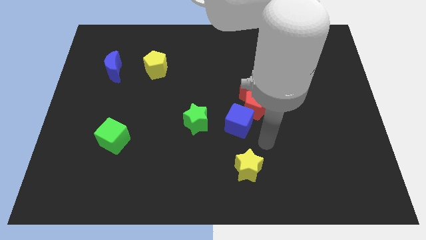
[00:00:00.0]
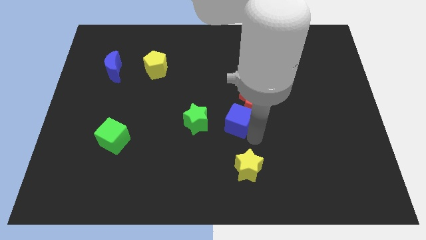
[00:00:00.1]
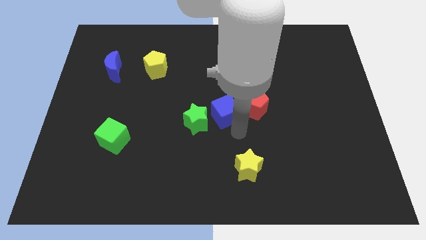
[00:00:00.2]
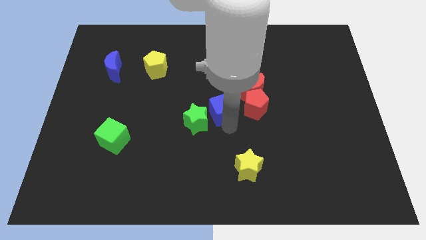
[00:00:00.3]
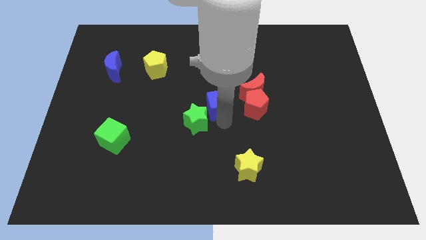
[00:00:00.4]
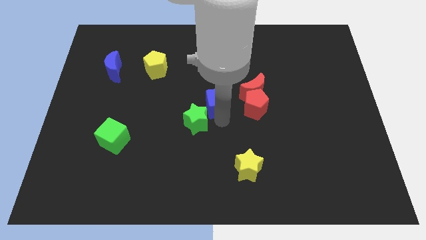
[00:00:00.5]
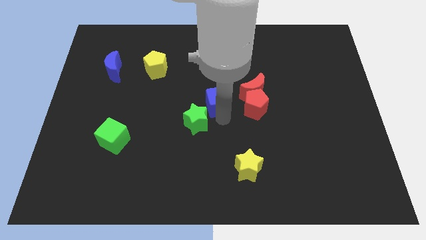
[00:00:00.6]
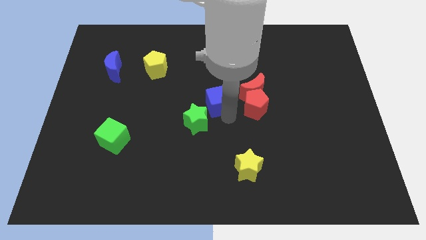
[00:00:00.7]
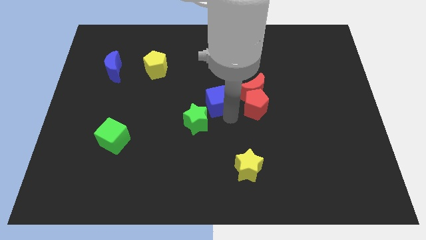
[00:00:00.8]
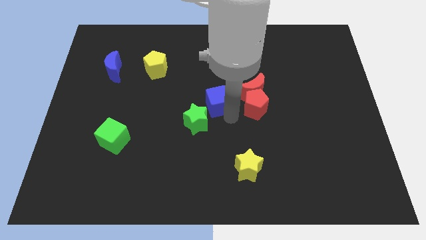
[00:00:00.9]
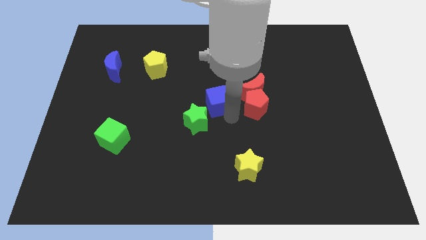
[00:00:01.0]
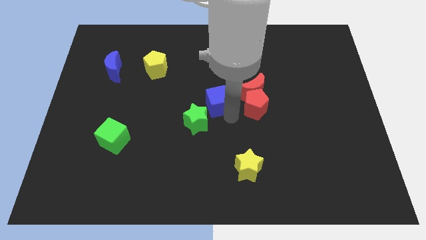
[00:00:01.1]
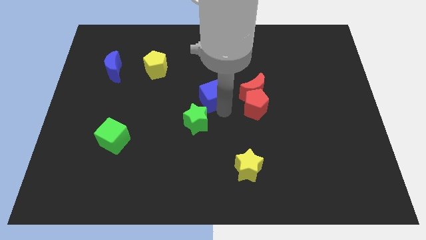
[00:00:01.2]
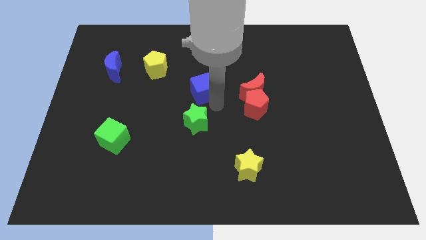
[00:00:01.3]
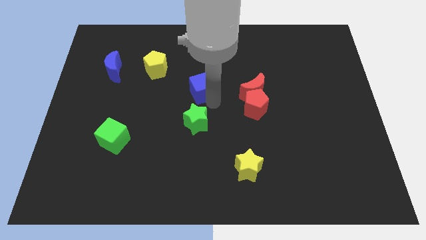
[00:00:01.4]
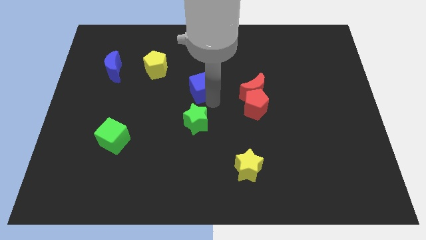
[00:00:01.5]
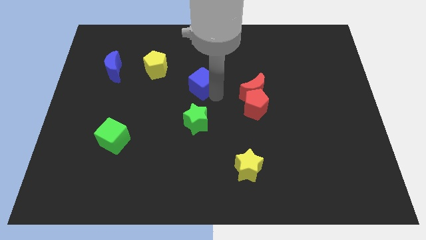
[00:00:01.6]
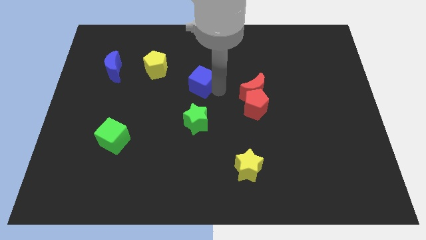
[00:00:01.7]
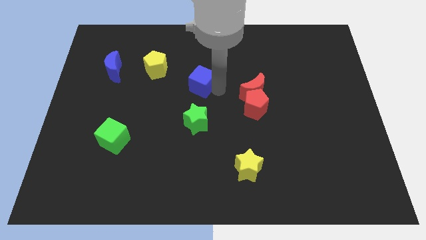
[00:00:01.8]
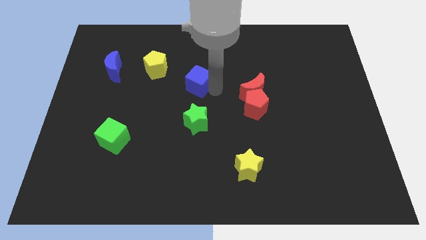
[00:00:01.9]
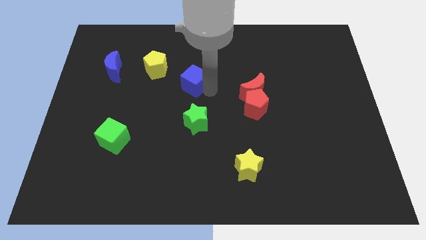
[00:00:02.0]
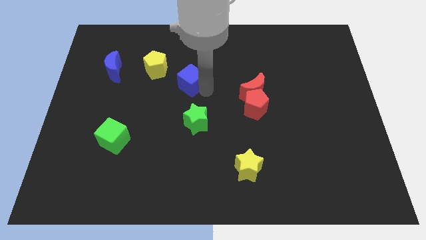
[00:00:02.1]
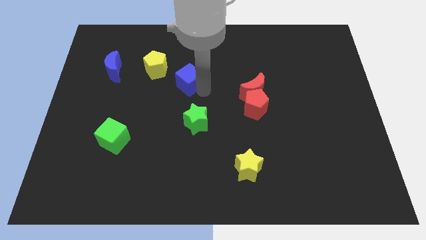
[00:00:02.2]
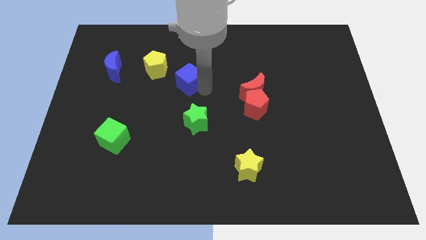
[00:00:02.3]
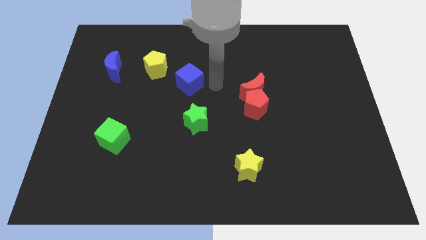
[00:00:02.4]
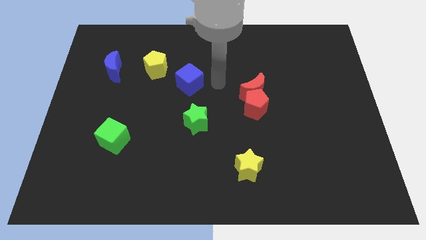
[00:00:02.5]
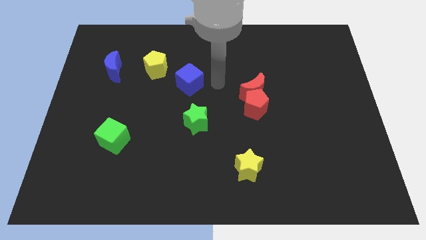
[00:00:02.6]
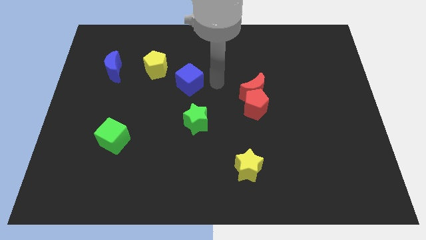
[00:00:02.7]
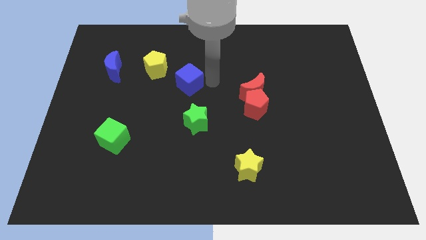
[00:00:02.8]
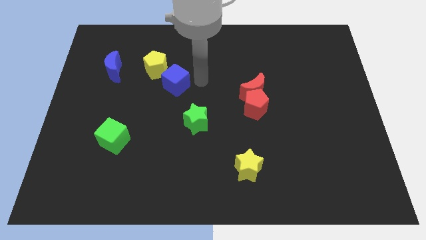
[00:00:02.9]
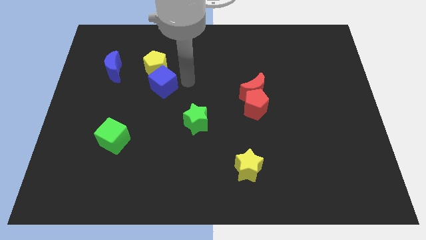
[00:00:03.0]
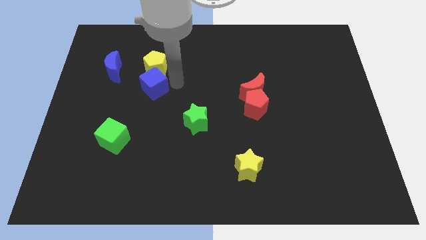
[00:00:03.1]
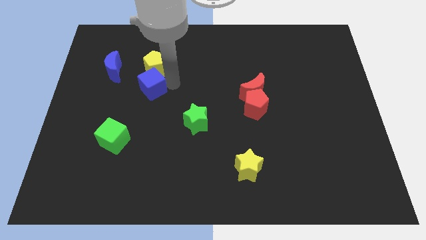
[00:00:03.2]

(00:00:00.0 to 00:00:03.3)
move the blue cube to the bottom of the yellow pentagon

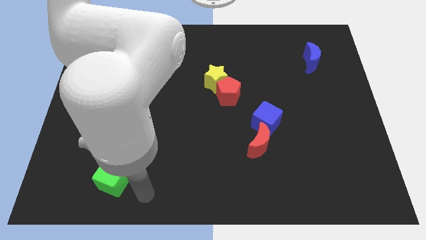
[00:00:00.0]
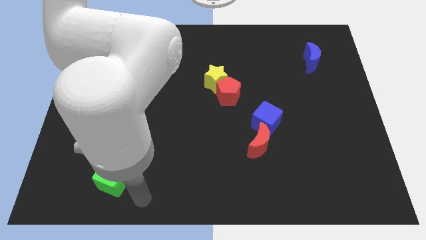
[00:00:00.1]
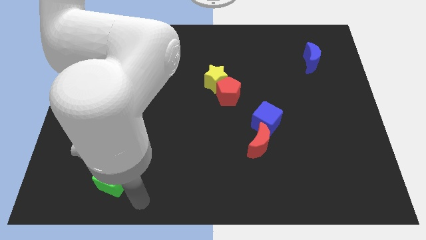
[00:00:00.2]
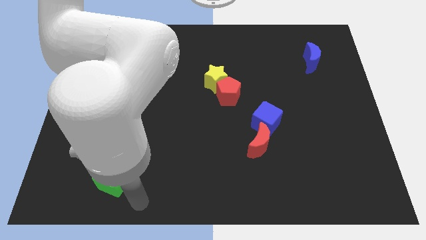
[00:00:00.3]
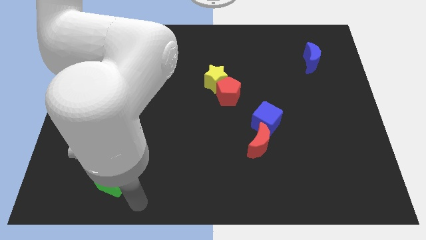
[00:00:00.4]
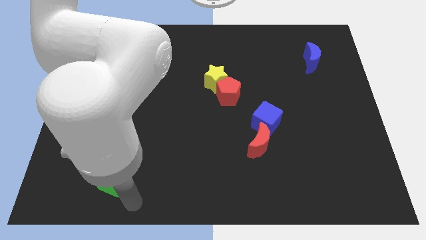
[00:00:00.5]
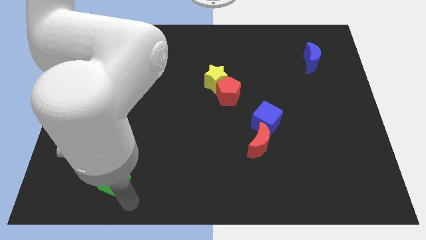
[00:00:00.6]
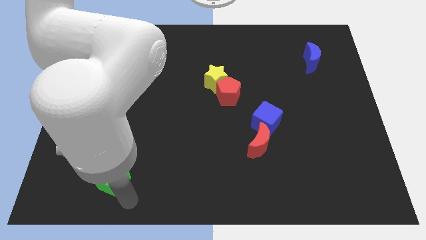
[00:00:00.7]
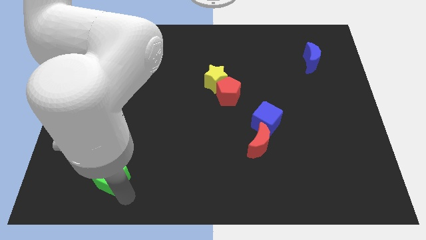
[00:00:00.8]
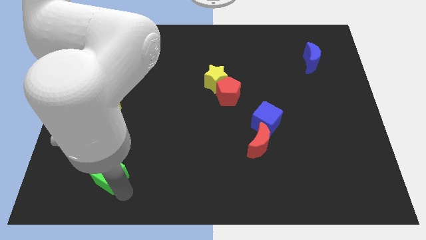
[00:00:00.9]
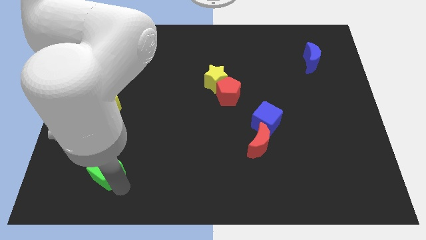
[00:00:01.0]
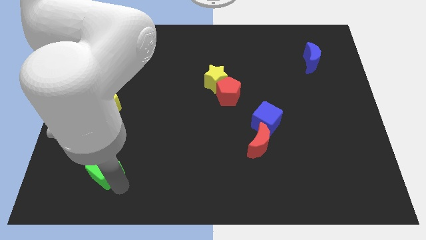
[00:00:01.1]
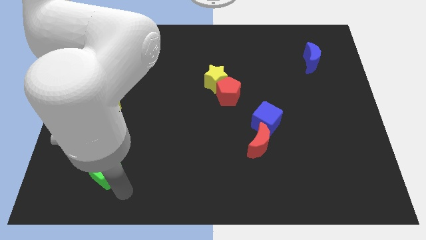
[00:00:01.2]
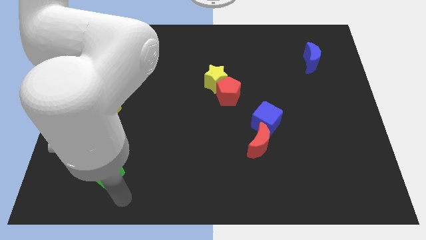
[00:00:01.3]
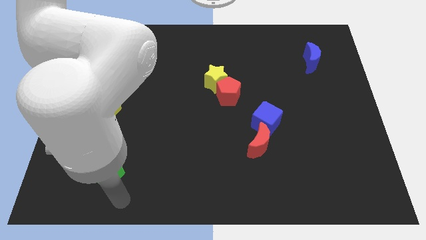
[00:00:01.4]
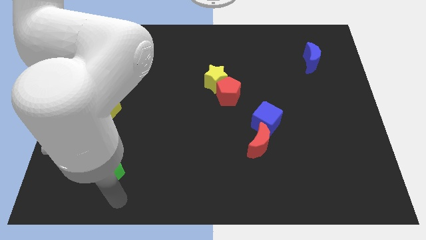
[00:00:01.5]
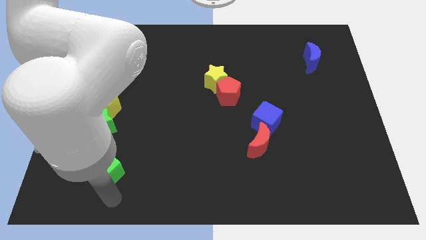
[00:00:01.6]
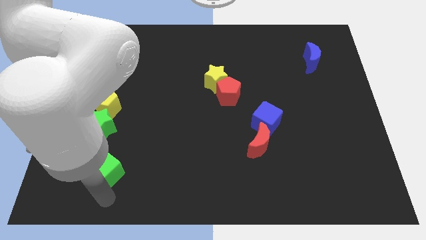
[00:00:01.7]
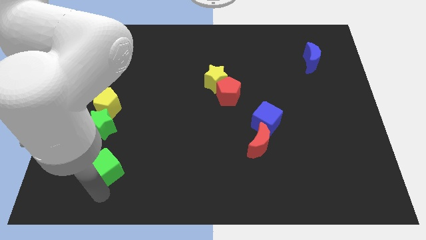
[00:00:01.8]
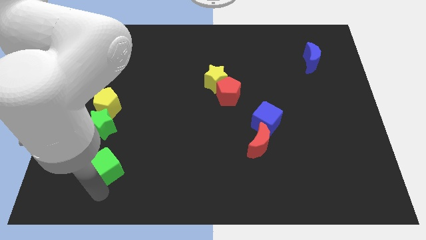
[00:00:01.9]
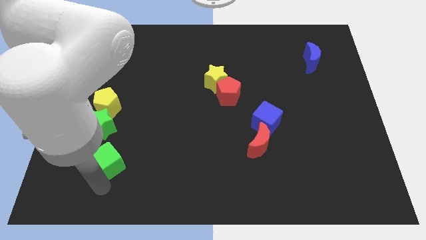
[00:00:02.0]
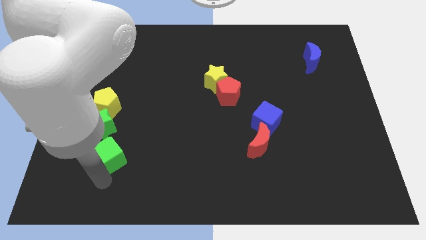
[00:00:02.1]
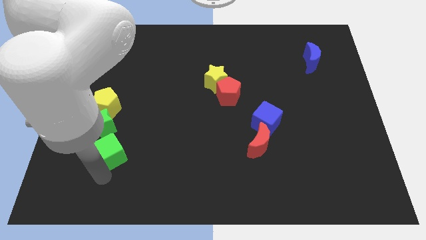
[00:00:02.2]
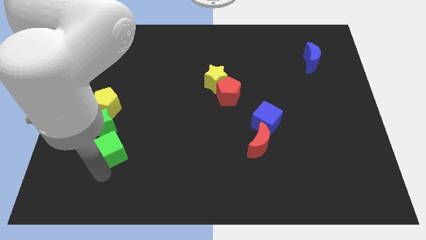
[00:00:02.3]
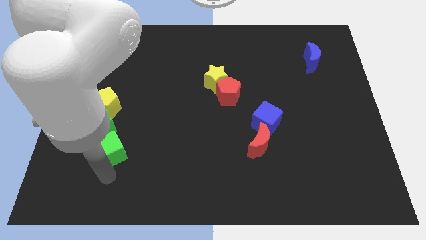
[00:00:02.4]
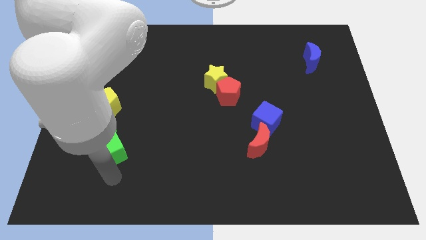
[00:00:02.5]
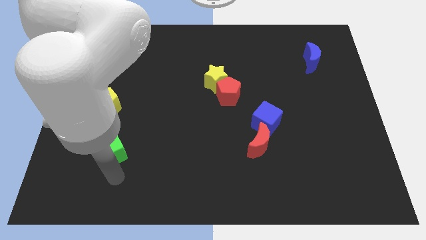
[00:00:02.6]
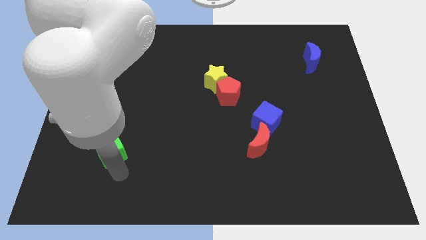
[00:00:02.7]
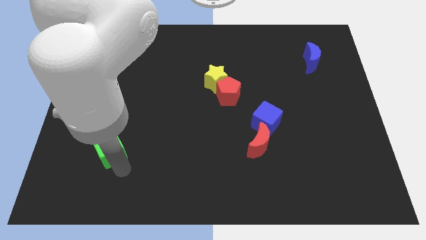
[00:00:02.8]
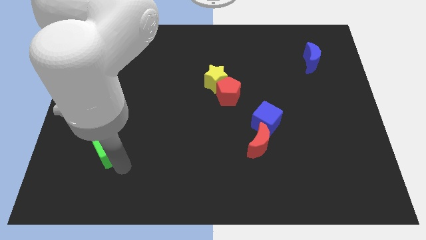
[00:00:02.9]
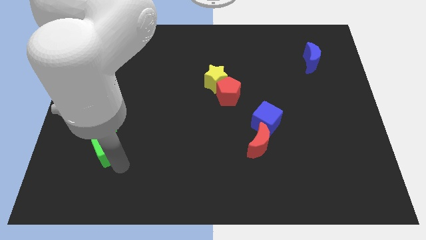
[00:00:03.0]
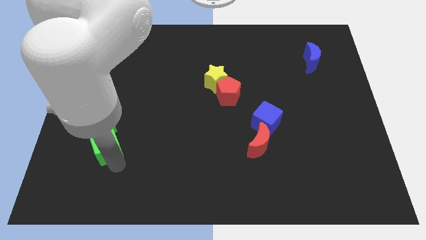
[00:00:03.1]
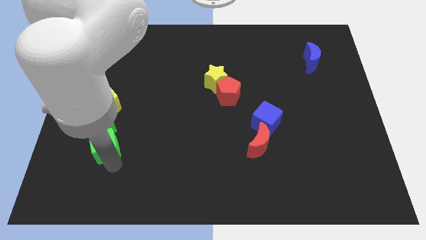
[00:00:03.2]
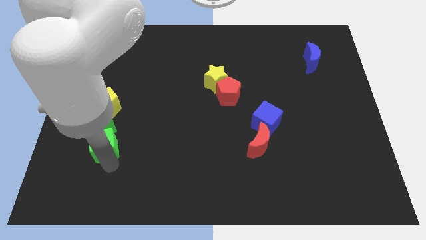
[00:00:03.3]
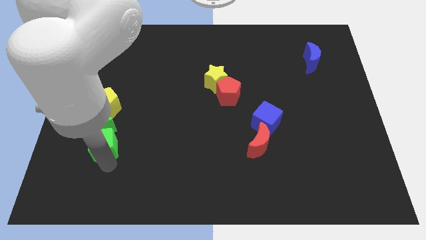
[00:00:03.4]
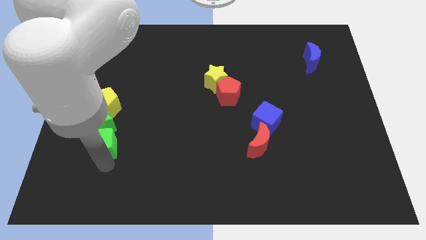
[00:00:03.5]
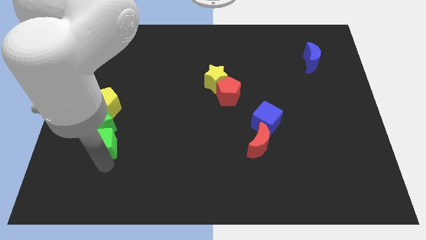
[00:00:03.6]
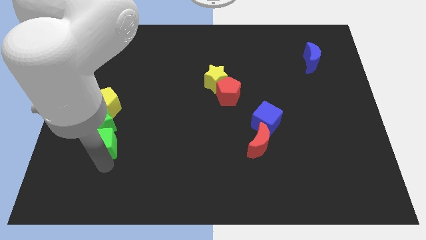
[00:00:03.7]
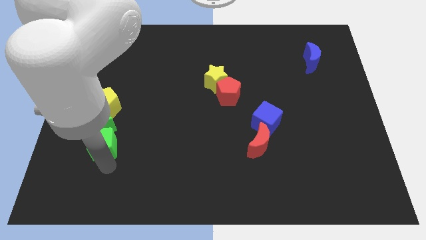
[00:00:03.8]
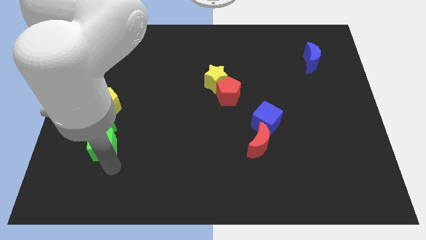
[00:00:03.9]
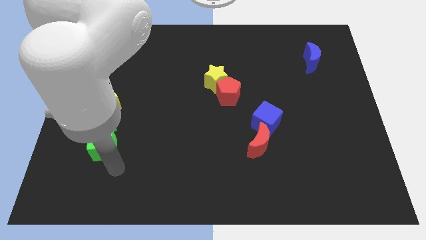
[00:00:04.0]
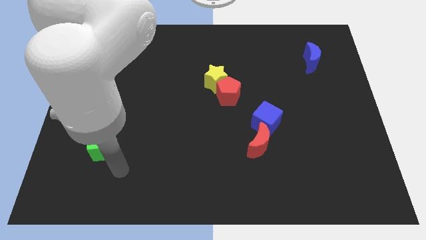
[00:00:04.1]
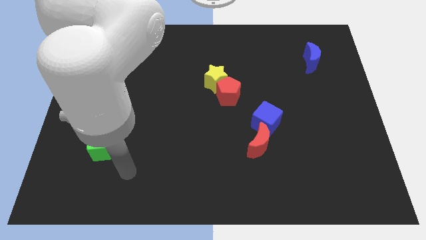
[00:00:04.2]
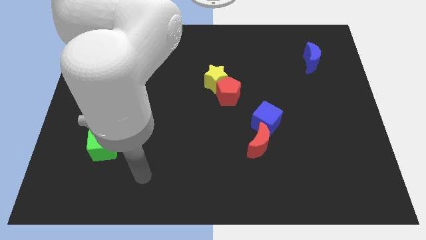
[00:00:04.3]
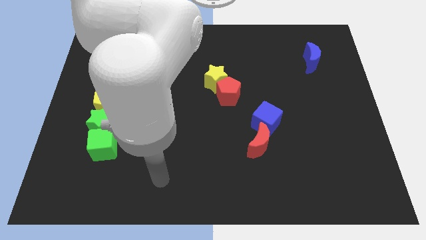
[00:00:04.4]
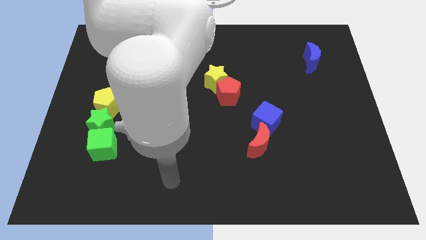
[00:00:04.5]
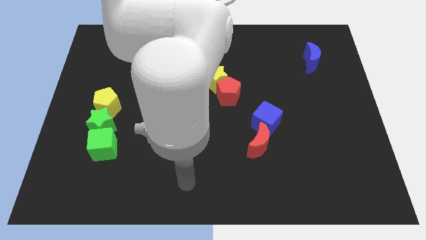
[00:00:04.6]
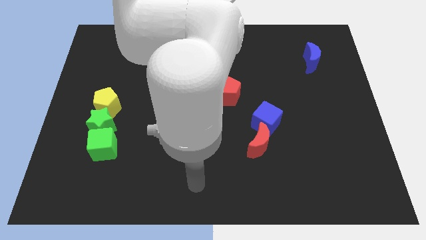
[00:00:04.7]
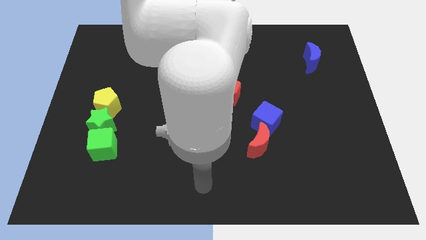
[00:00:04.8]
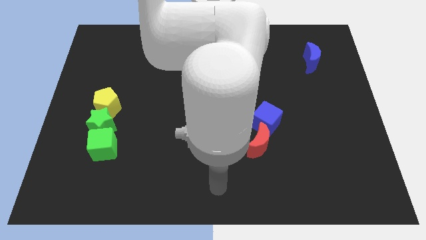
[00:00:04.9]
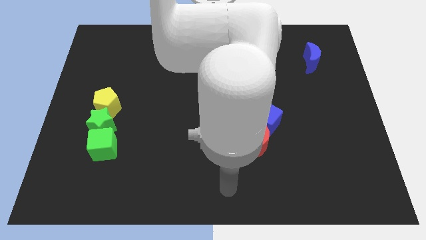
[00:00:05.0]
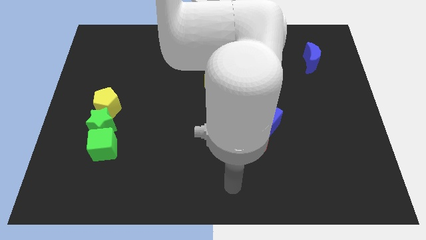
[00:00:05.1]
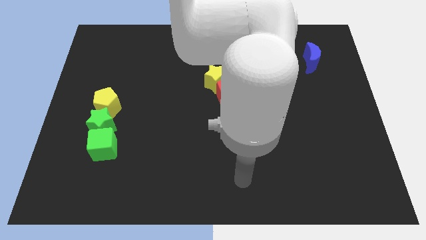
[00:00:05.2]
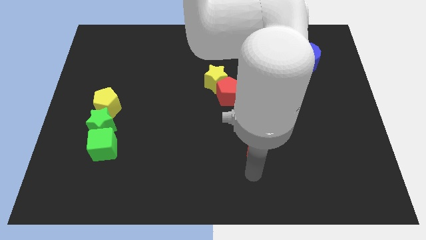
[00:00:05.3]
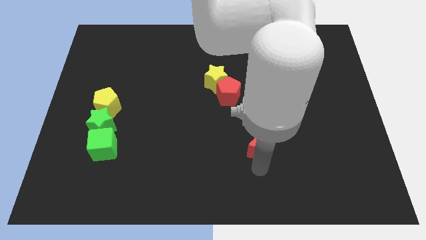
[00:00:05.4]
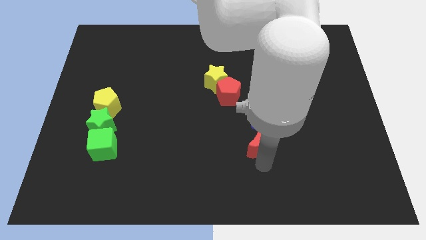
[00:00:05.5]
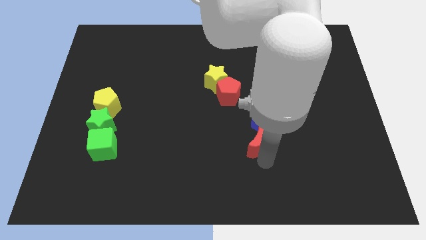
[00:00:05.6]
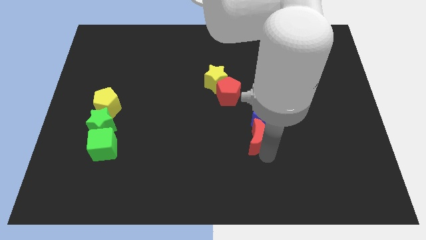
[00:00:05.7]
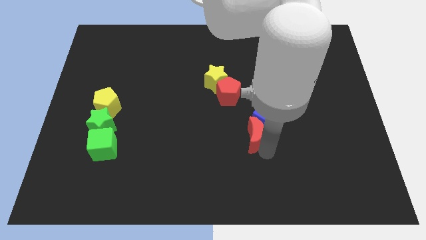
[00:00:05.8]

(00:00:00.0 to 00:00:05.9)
move your arm away from the green cube
